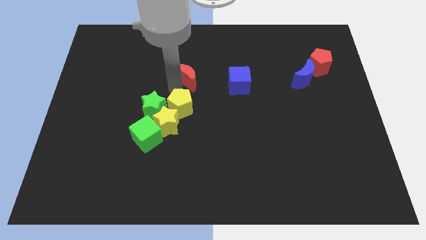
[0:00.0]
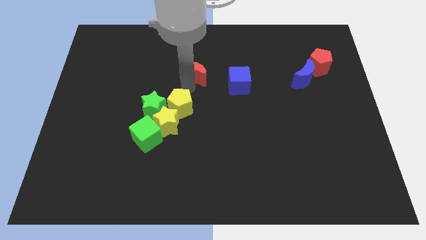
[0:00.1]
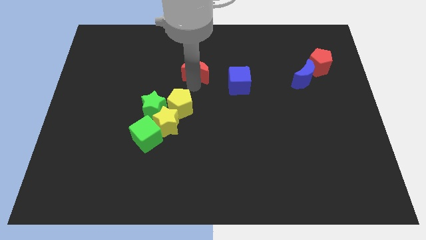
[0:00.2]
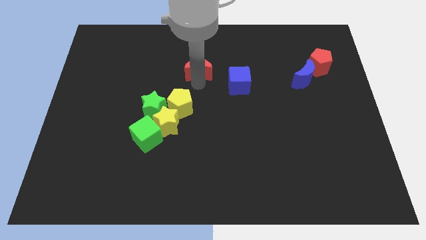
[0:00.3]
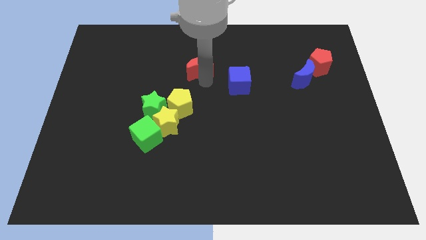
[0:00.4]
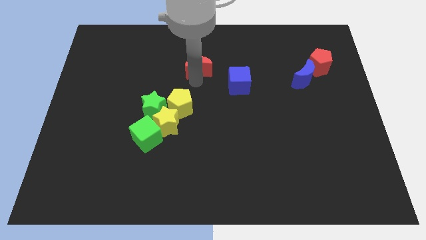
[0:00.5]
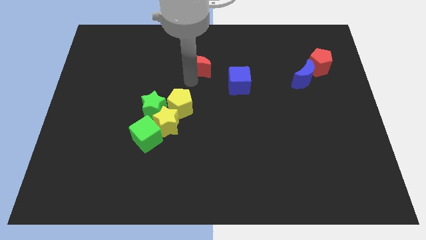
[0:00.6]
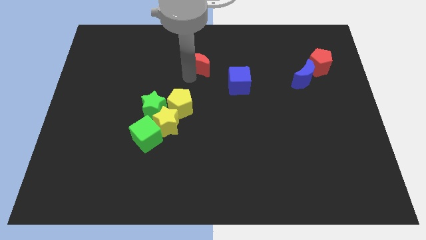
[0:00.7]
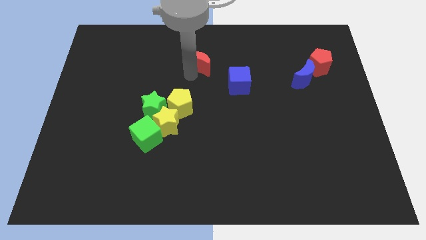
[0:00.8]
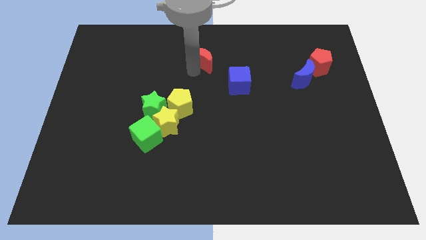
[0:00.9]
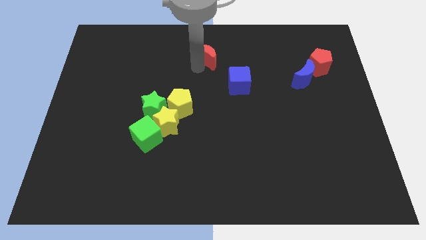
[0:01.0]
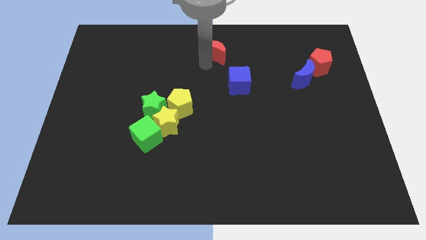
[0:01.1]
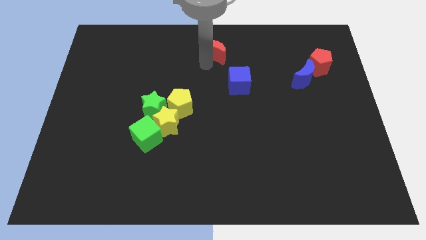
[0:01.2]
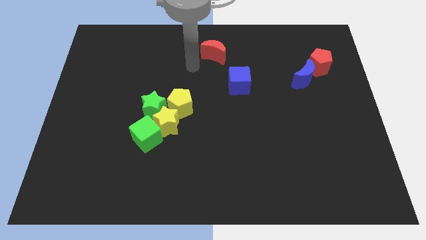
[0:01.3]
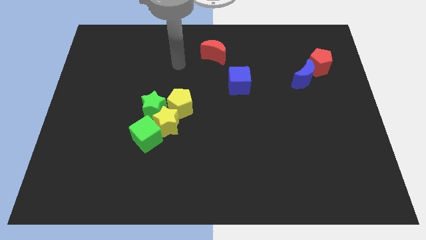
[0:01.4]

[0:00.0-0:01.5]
push the red crescent towards top center of board

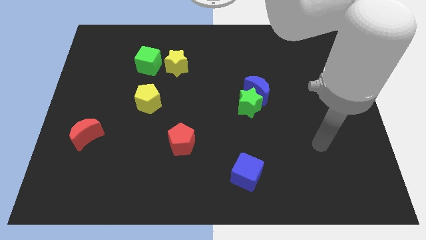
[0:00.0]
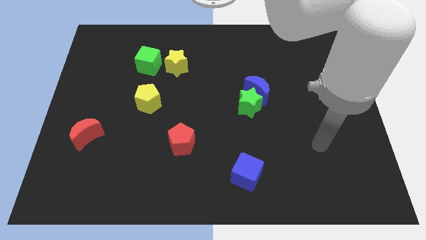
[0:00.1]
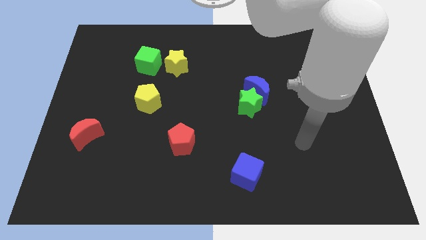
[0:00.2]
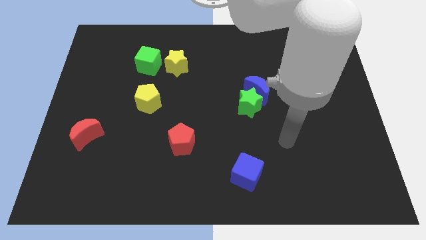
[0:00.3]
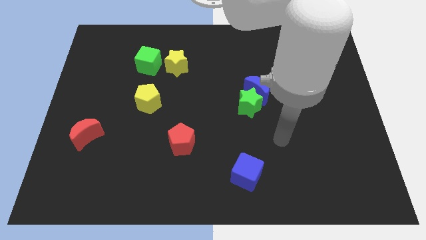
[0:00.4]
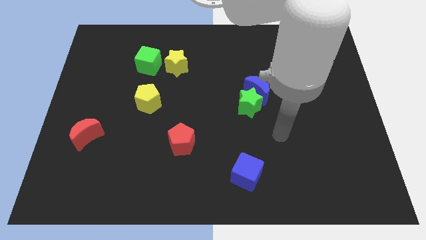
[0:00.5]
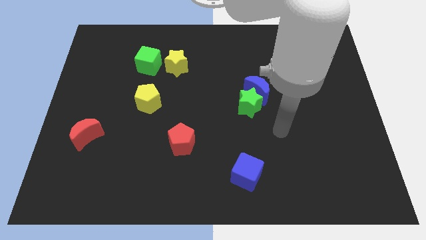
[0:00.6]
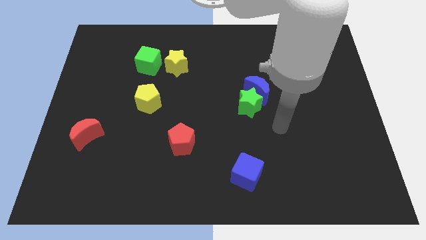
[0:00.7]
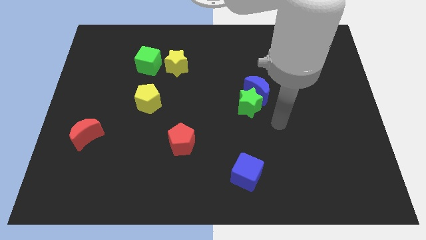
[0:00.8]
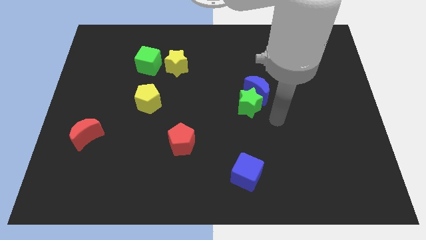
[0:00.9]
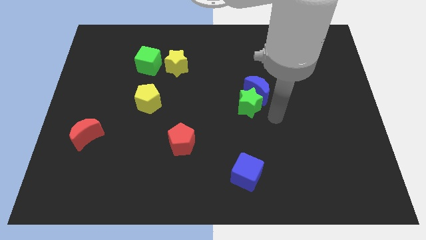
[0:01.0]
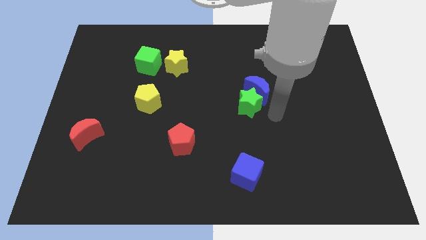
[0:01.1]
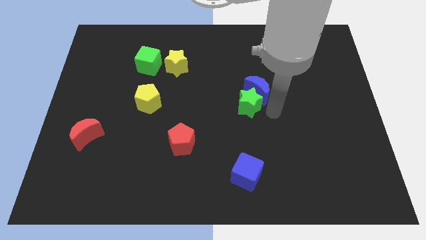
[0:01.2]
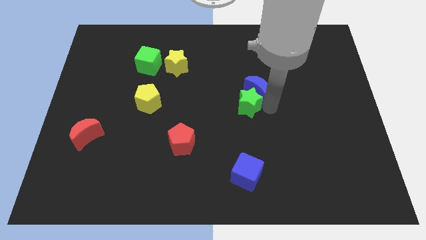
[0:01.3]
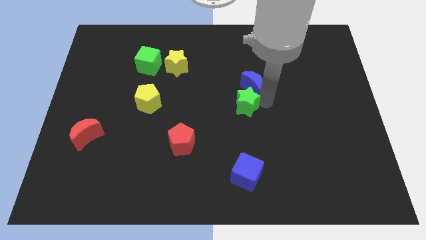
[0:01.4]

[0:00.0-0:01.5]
point your arm close to blue moon and green star

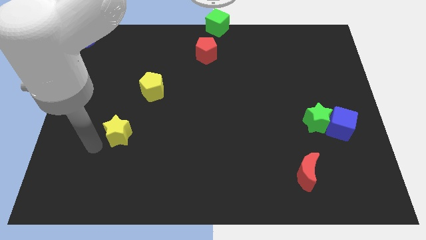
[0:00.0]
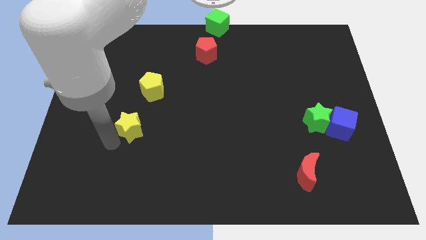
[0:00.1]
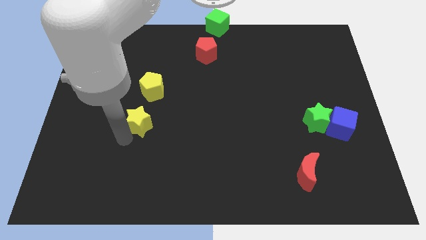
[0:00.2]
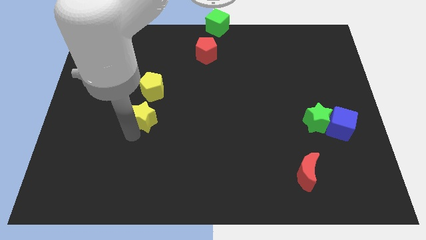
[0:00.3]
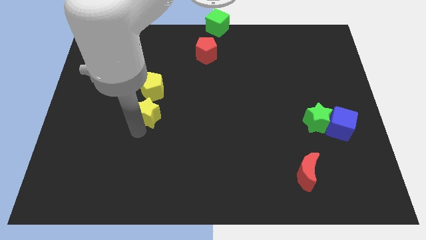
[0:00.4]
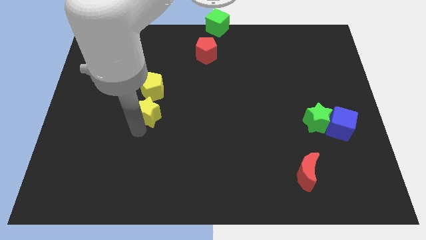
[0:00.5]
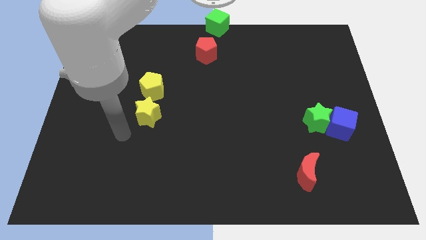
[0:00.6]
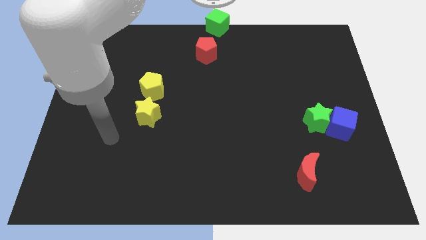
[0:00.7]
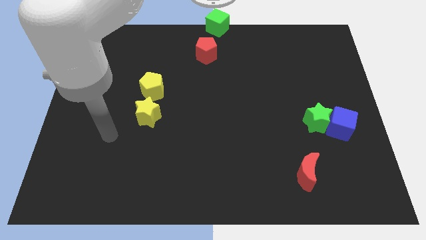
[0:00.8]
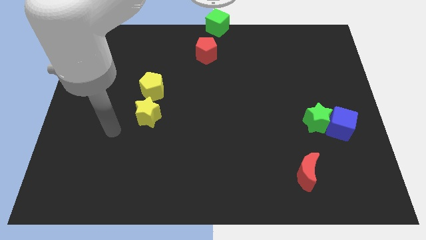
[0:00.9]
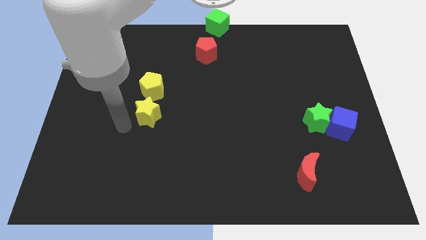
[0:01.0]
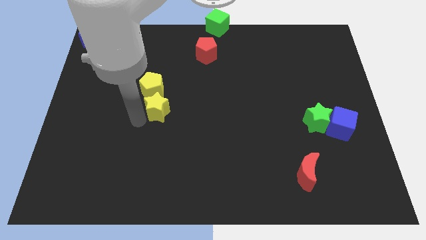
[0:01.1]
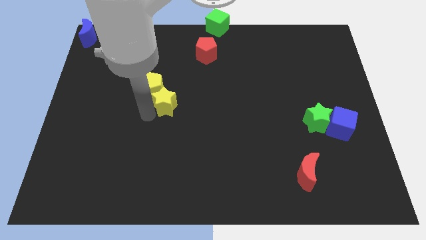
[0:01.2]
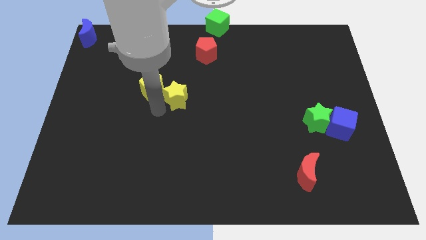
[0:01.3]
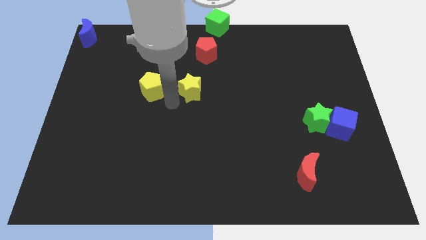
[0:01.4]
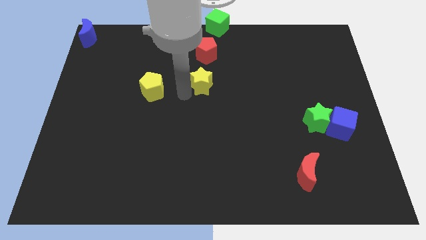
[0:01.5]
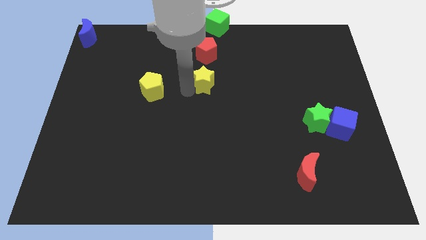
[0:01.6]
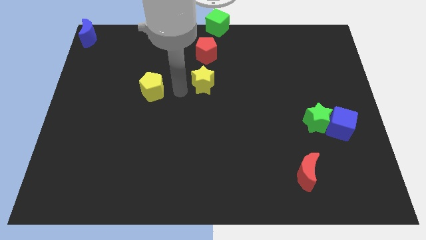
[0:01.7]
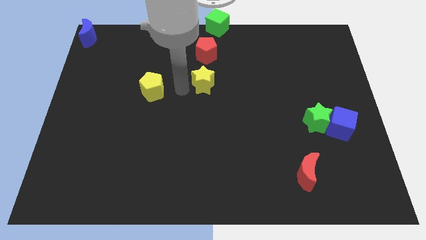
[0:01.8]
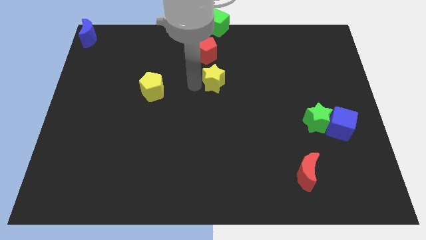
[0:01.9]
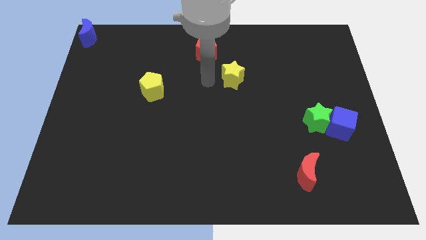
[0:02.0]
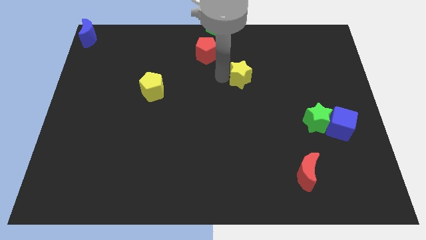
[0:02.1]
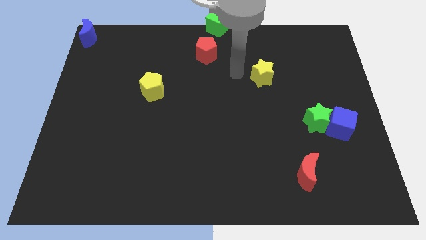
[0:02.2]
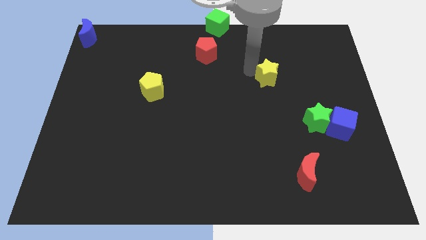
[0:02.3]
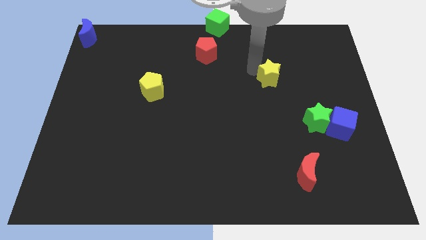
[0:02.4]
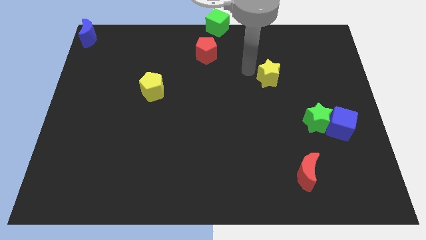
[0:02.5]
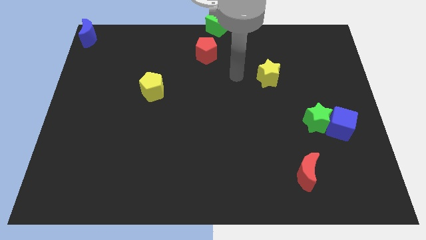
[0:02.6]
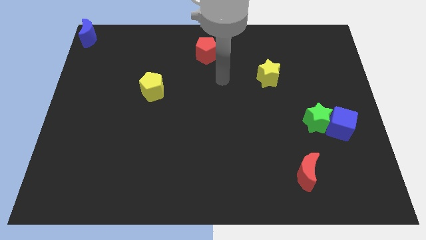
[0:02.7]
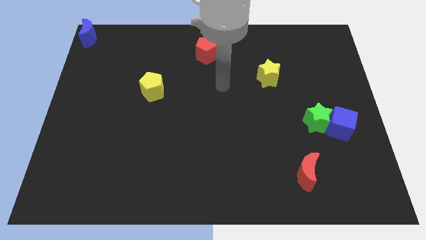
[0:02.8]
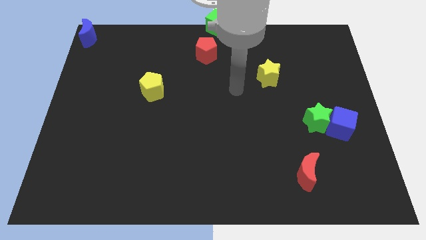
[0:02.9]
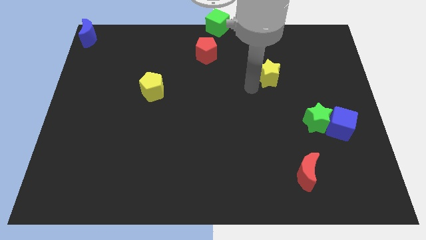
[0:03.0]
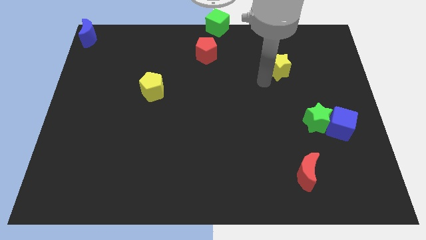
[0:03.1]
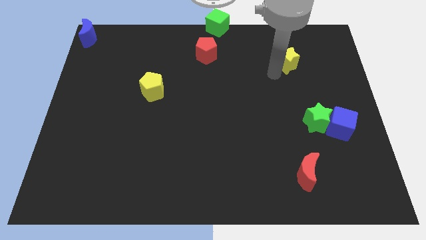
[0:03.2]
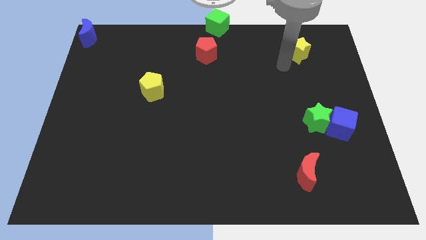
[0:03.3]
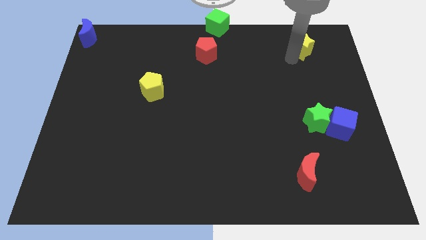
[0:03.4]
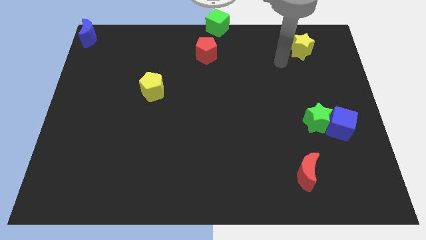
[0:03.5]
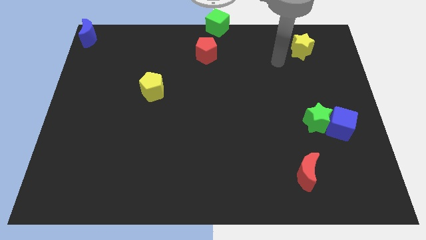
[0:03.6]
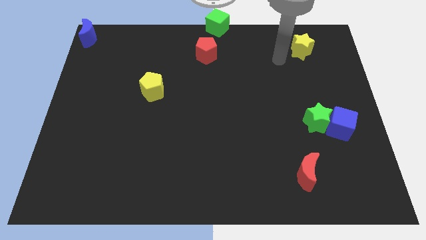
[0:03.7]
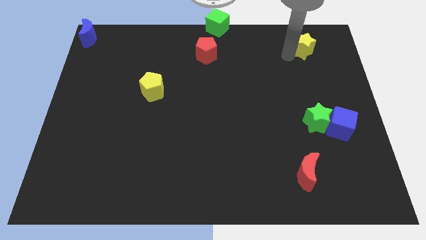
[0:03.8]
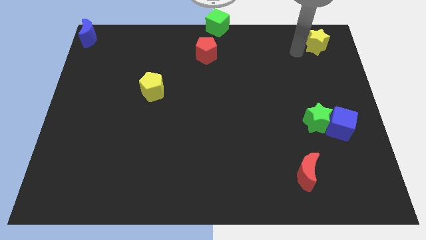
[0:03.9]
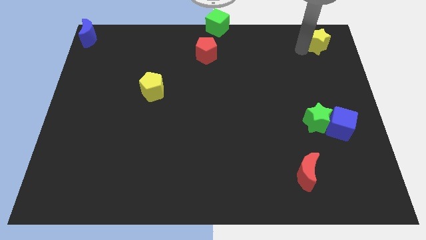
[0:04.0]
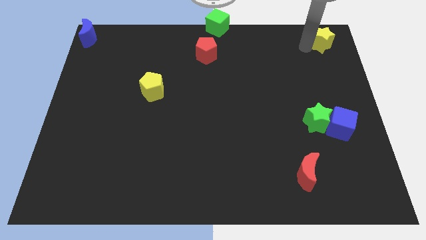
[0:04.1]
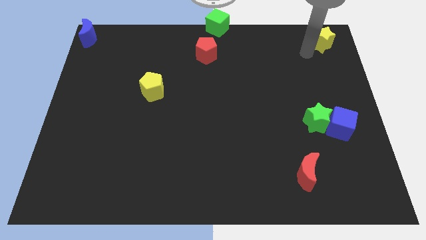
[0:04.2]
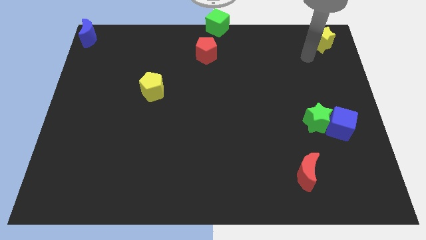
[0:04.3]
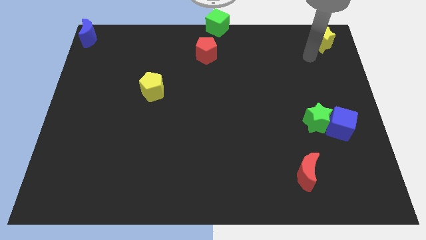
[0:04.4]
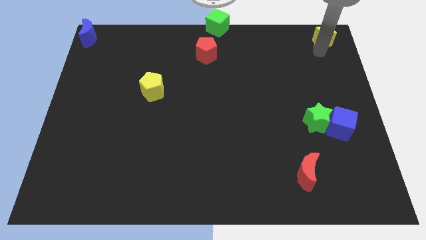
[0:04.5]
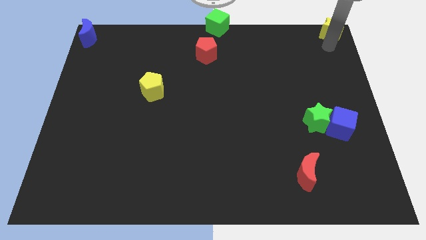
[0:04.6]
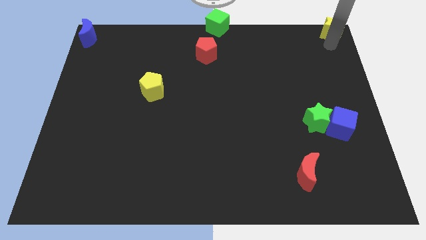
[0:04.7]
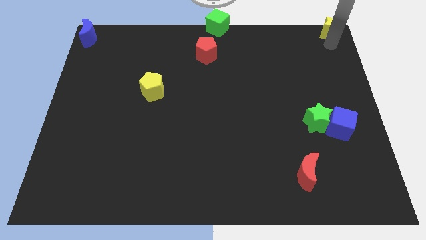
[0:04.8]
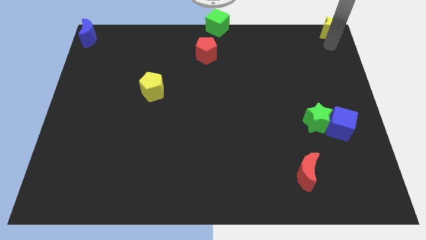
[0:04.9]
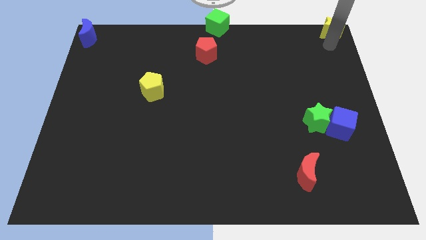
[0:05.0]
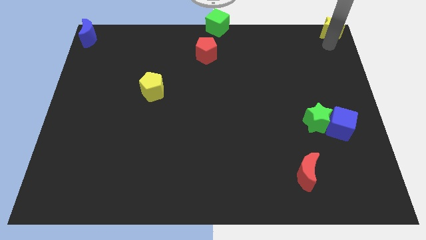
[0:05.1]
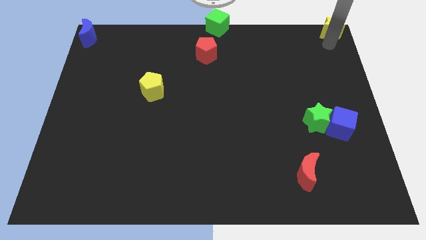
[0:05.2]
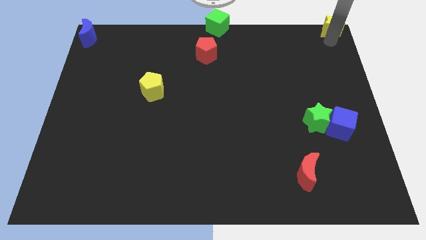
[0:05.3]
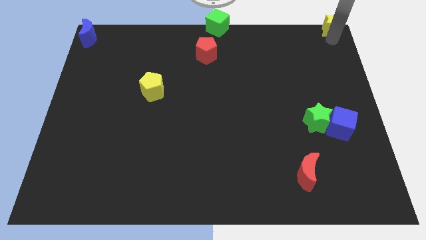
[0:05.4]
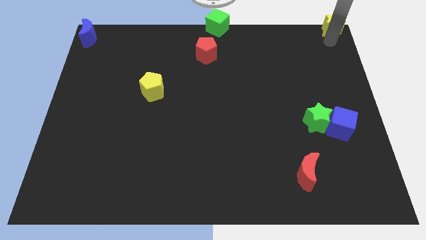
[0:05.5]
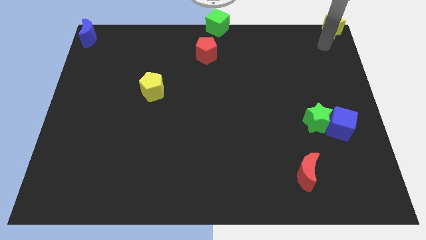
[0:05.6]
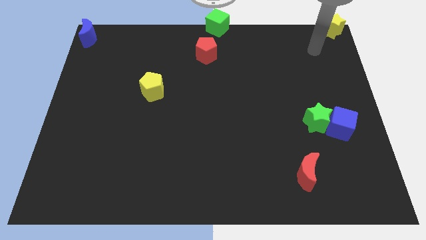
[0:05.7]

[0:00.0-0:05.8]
push the yellow star to the top right of the board

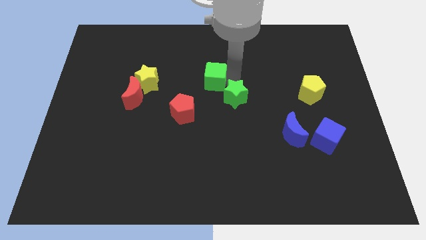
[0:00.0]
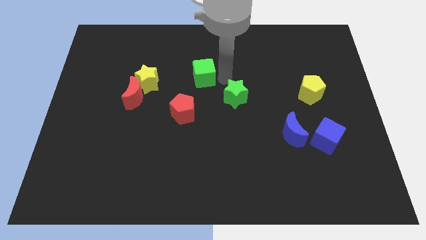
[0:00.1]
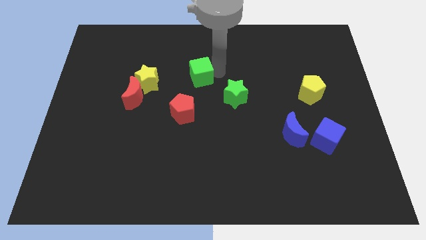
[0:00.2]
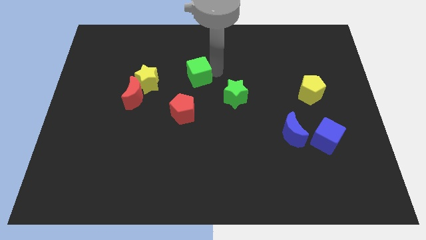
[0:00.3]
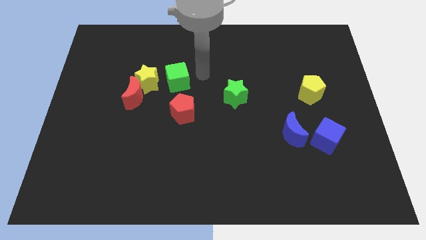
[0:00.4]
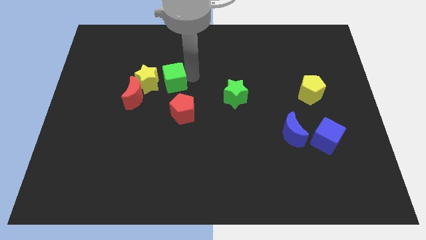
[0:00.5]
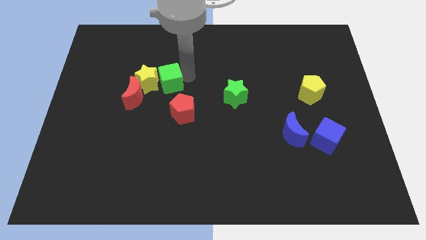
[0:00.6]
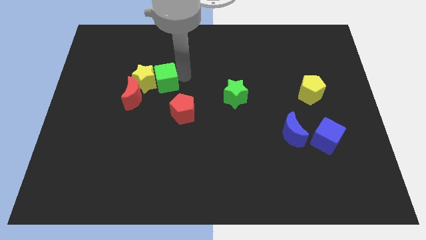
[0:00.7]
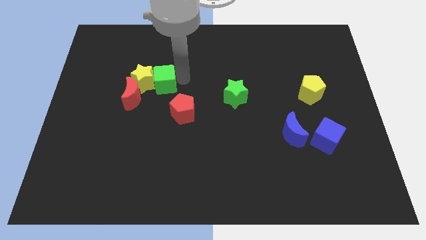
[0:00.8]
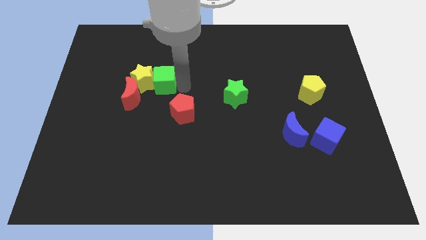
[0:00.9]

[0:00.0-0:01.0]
move the green cube to the top left of the red pentagon
